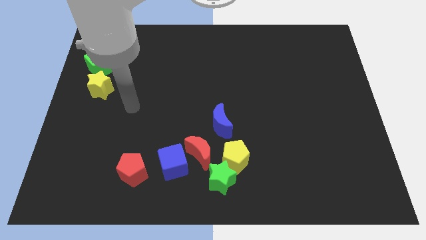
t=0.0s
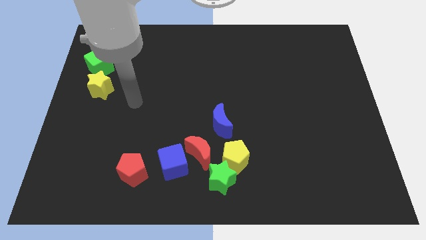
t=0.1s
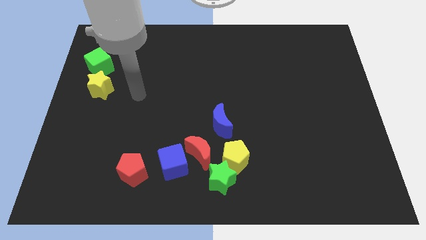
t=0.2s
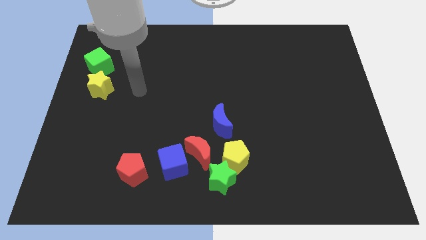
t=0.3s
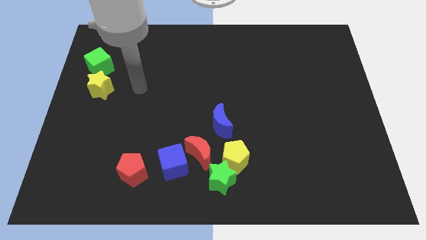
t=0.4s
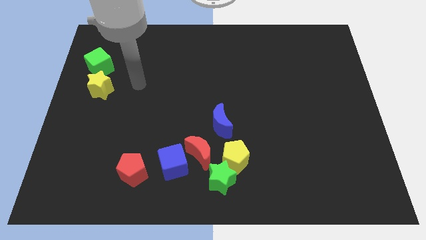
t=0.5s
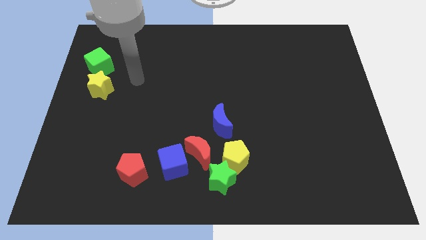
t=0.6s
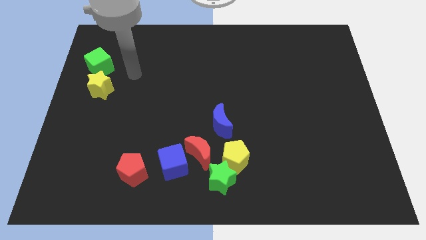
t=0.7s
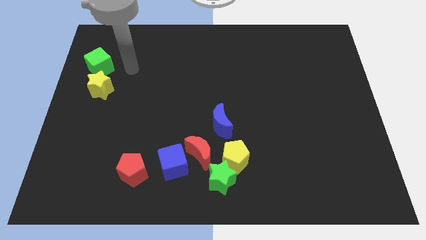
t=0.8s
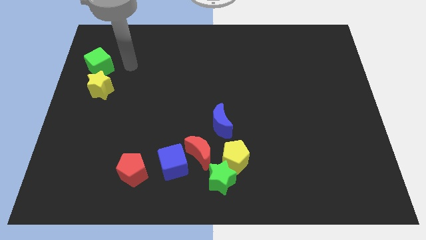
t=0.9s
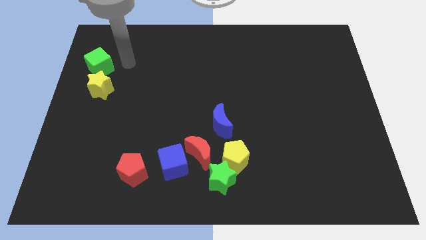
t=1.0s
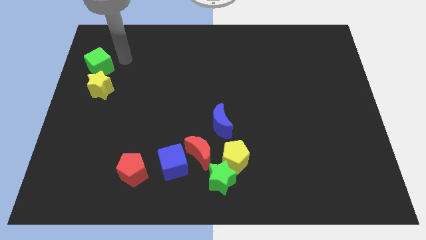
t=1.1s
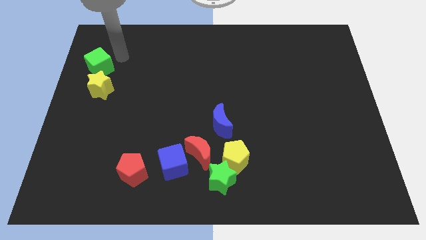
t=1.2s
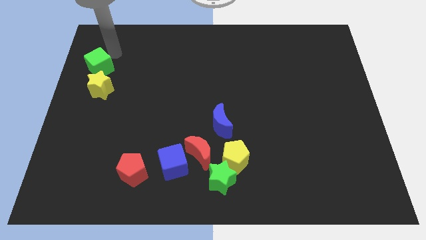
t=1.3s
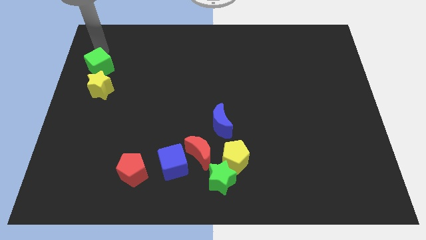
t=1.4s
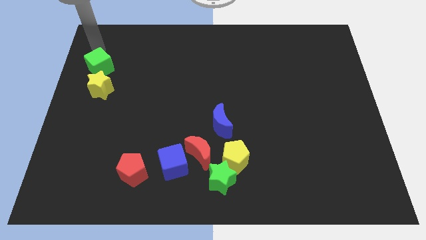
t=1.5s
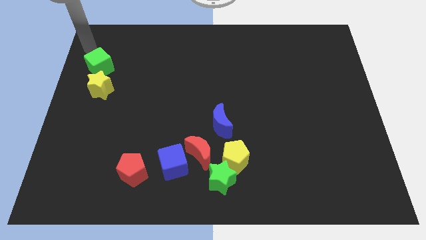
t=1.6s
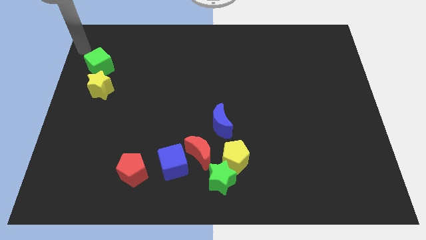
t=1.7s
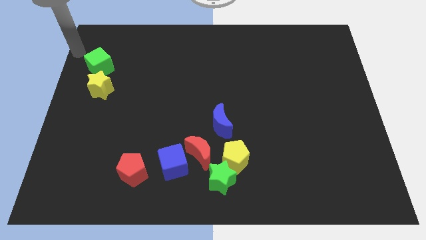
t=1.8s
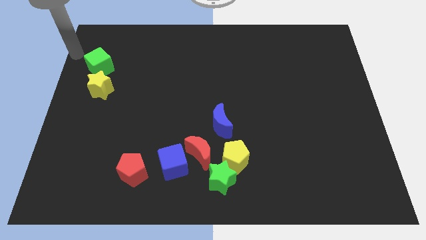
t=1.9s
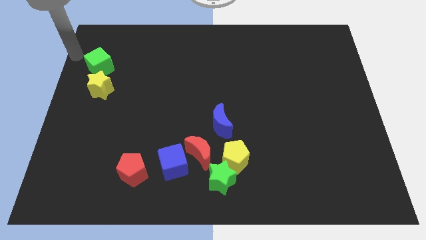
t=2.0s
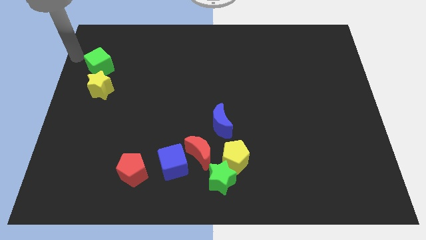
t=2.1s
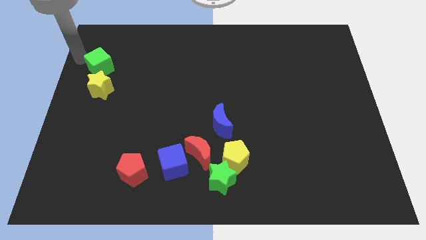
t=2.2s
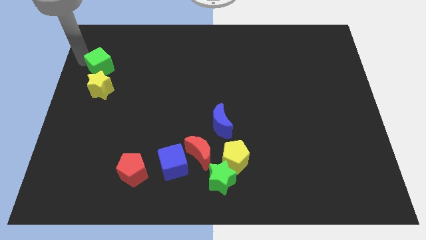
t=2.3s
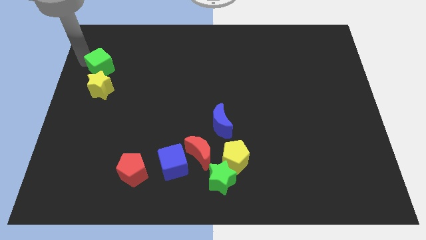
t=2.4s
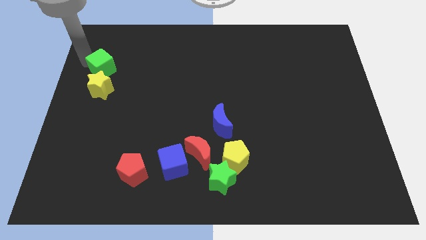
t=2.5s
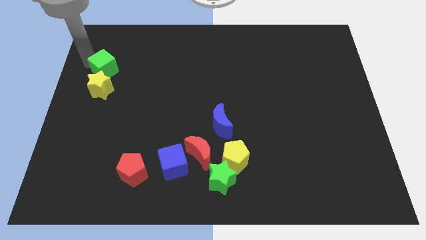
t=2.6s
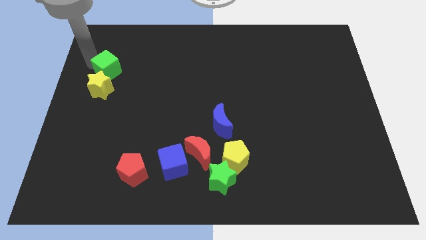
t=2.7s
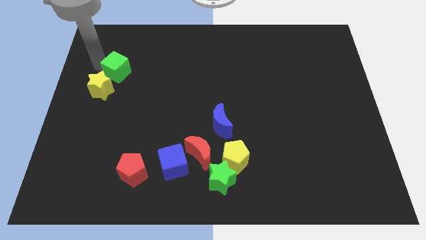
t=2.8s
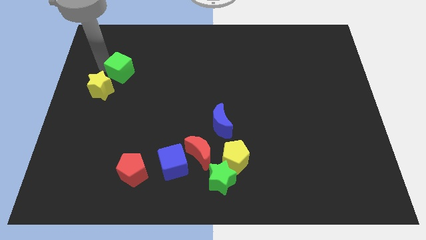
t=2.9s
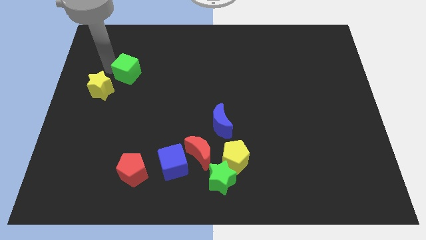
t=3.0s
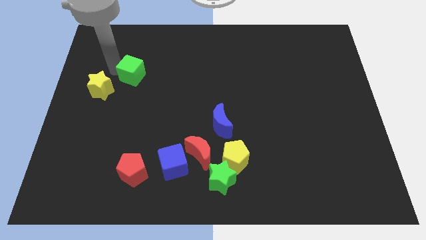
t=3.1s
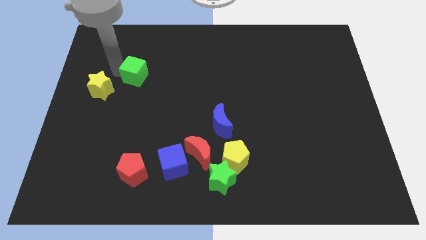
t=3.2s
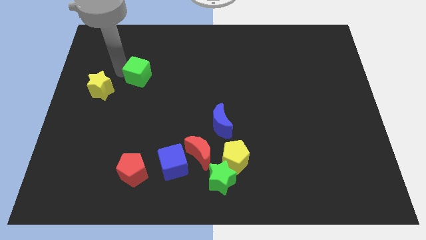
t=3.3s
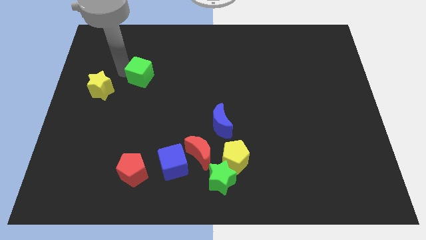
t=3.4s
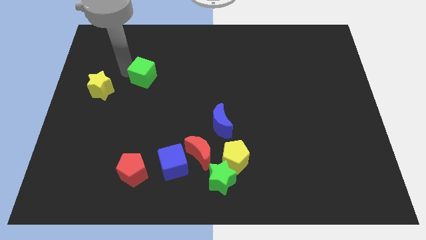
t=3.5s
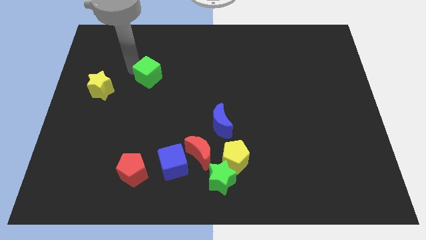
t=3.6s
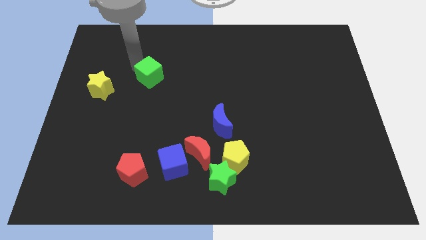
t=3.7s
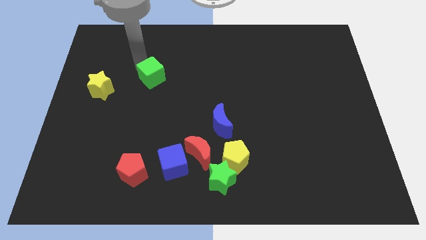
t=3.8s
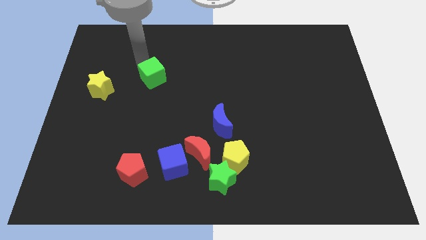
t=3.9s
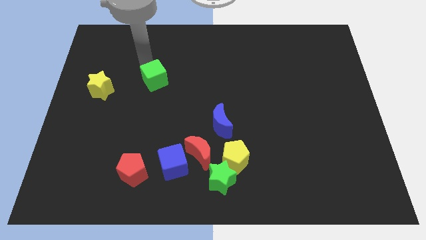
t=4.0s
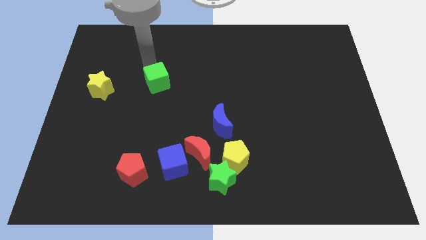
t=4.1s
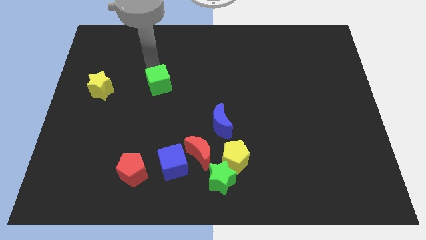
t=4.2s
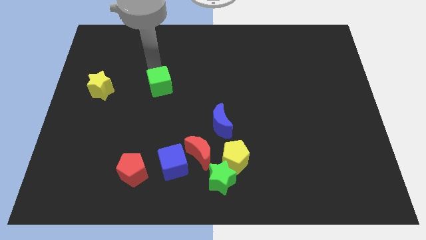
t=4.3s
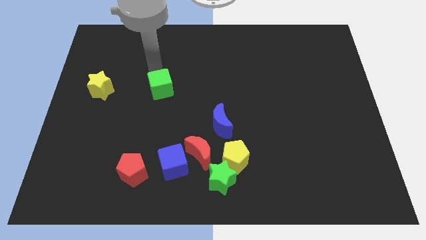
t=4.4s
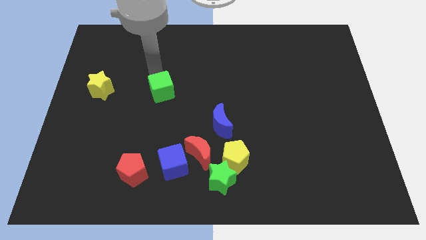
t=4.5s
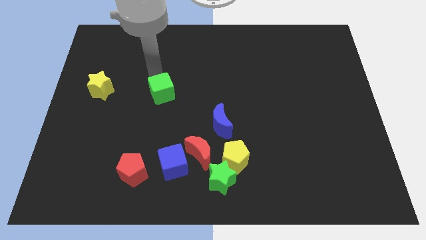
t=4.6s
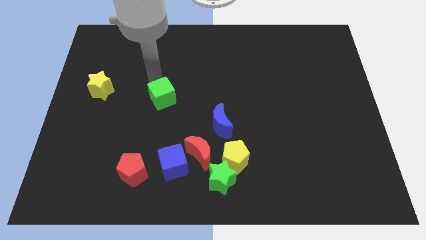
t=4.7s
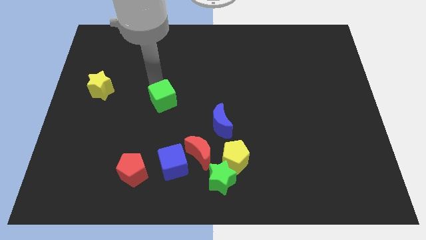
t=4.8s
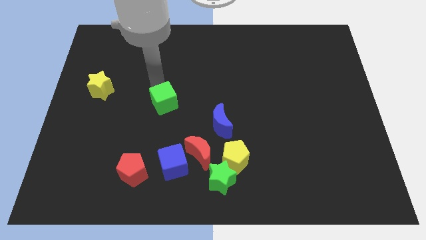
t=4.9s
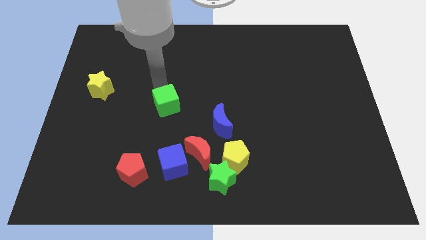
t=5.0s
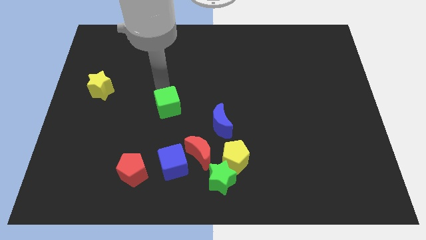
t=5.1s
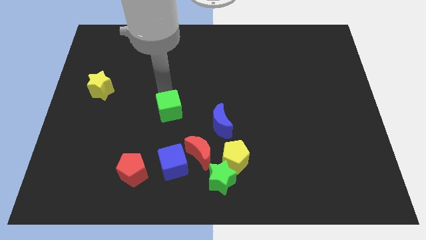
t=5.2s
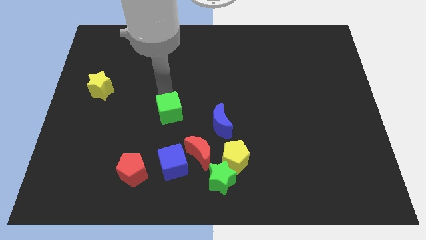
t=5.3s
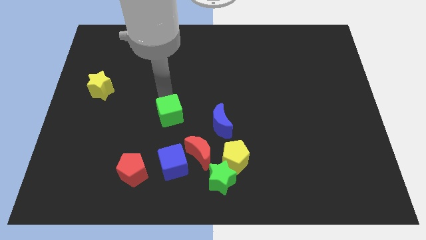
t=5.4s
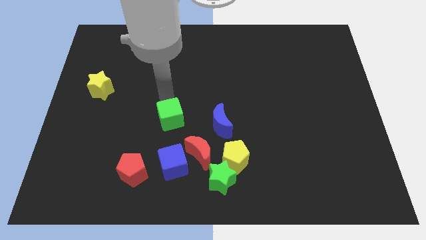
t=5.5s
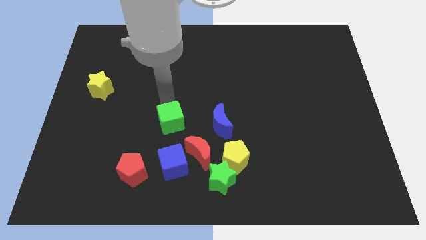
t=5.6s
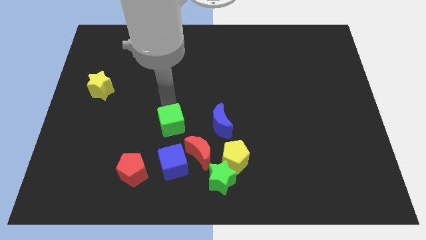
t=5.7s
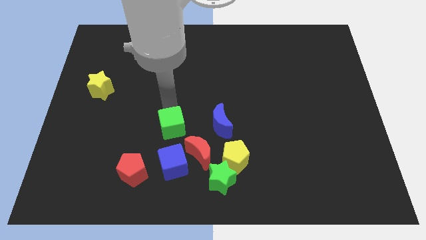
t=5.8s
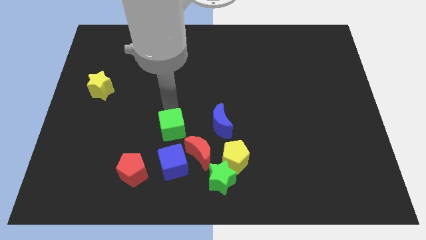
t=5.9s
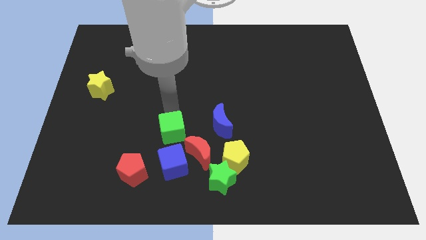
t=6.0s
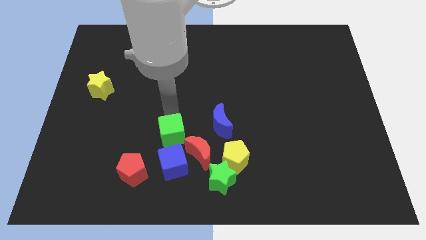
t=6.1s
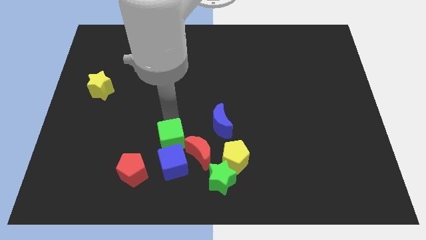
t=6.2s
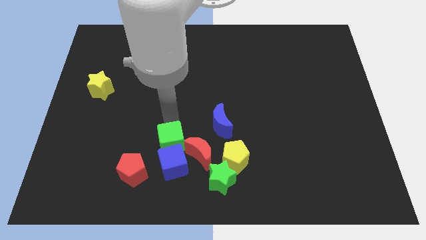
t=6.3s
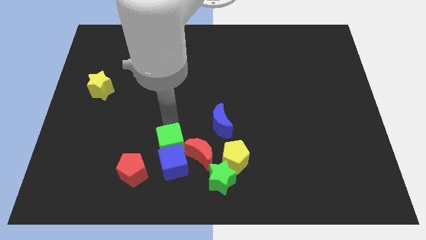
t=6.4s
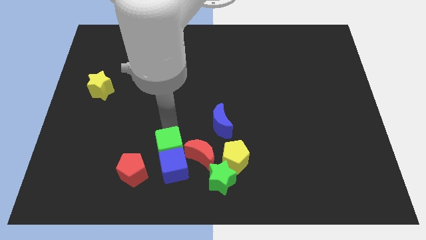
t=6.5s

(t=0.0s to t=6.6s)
push the green cube next to the blue cube

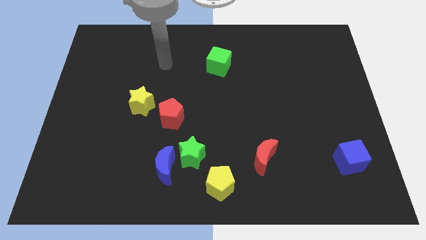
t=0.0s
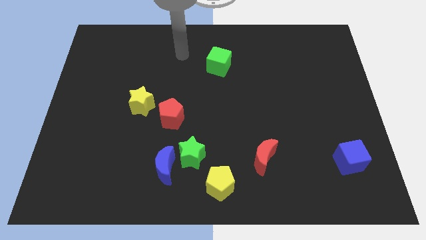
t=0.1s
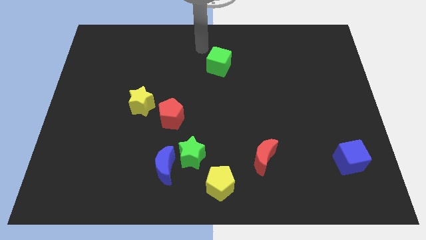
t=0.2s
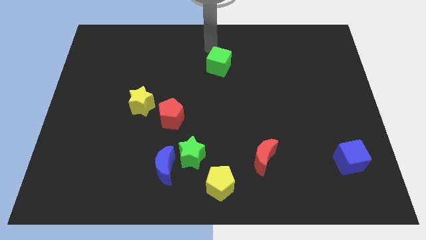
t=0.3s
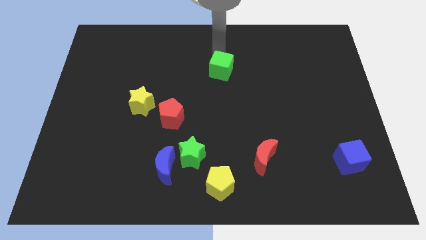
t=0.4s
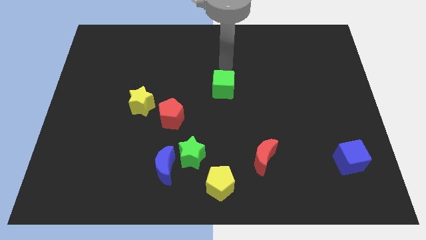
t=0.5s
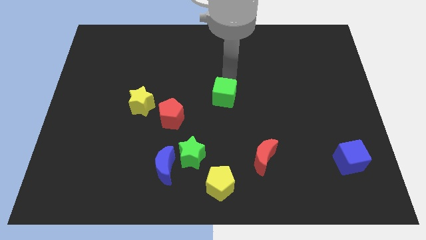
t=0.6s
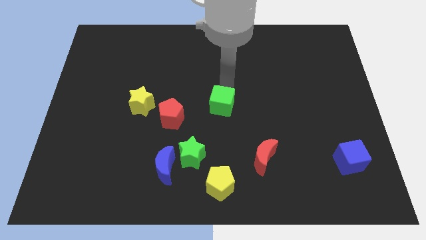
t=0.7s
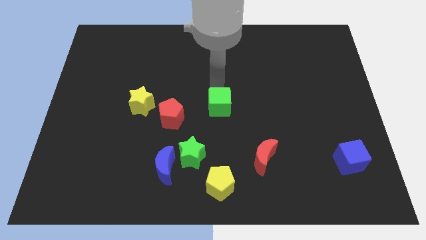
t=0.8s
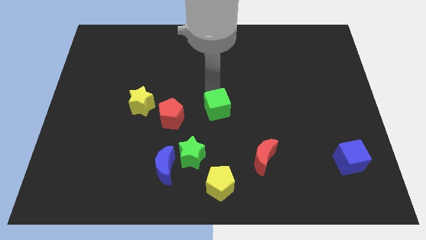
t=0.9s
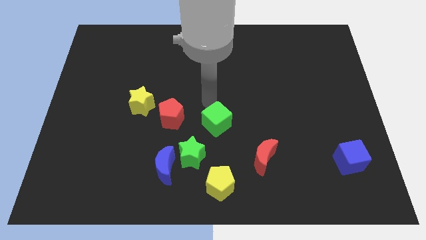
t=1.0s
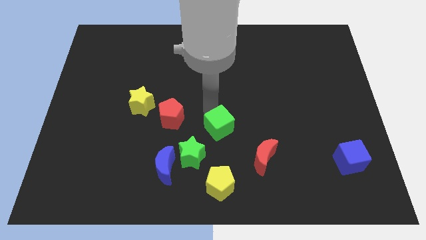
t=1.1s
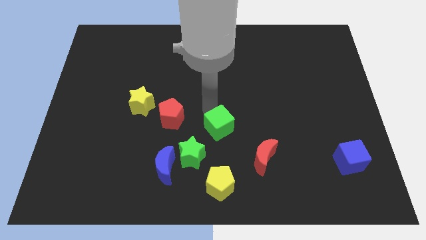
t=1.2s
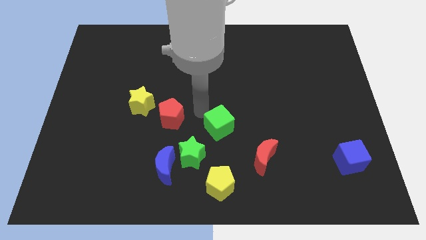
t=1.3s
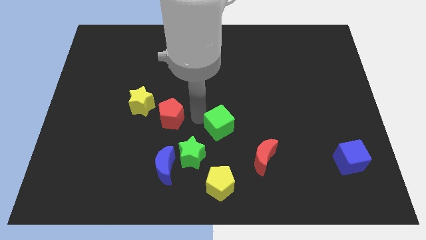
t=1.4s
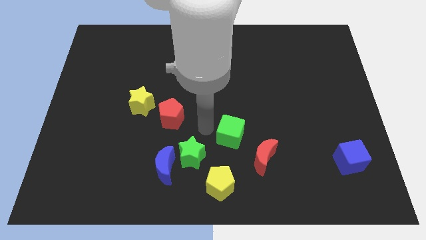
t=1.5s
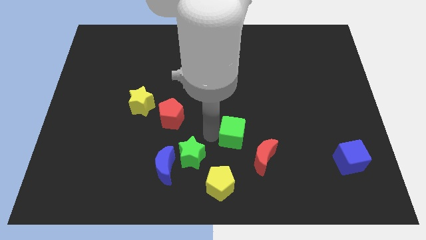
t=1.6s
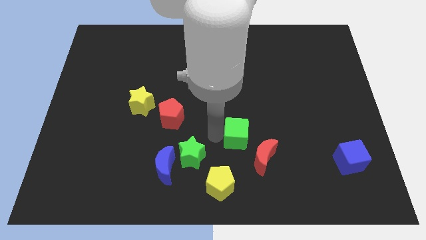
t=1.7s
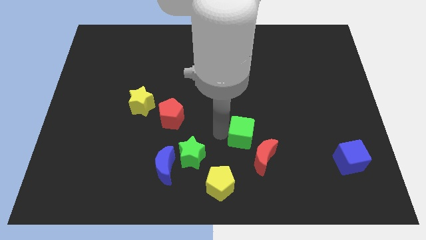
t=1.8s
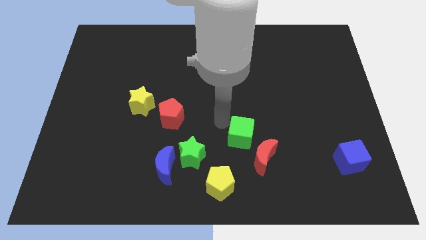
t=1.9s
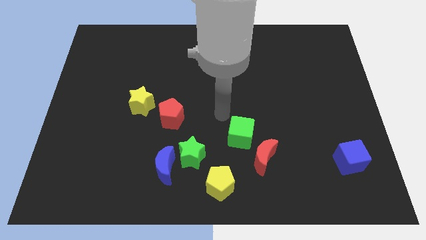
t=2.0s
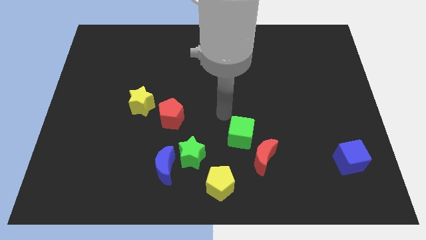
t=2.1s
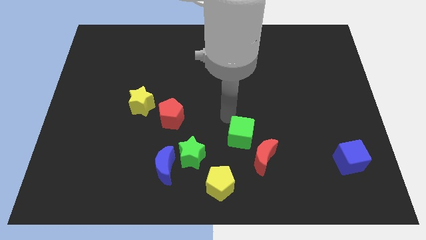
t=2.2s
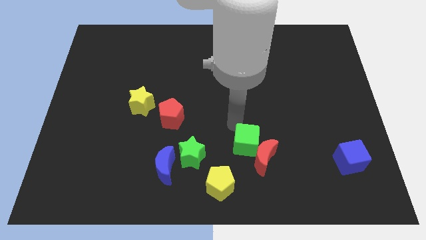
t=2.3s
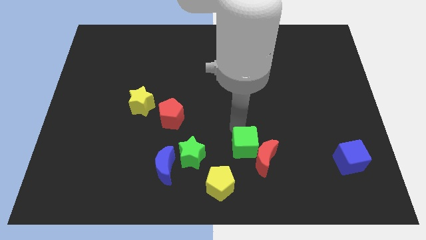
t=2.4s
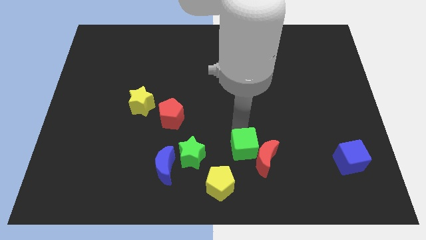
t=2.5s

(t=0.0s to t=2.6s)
slide the green cube close to the red moon
